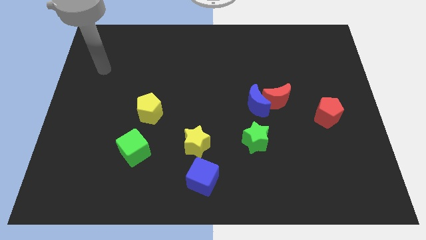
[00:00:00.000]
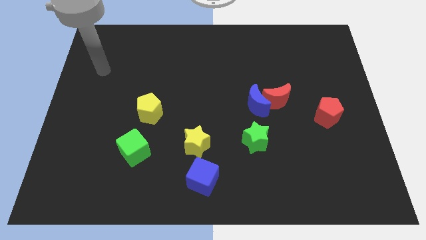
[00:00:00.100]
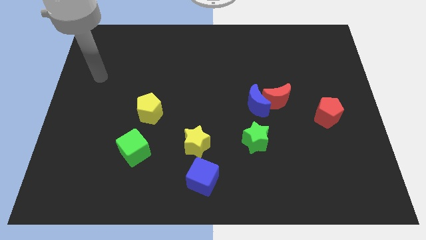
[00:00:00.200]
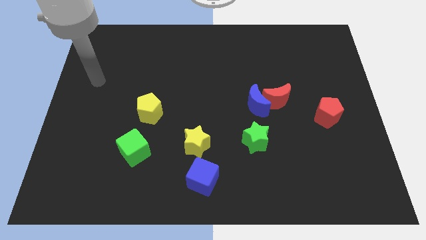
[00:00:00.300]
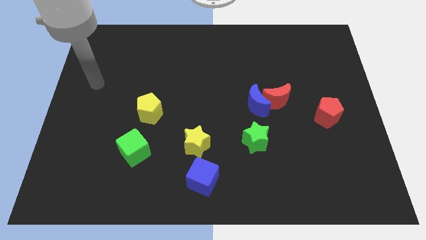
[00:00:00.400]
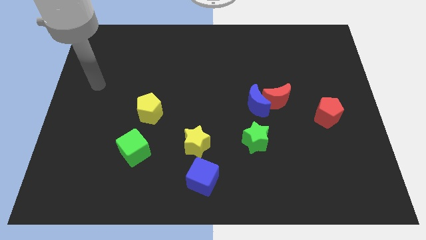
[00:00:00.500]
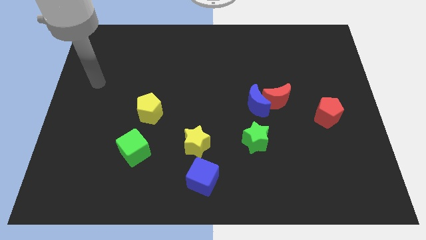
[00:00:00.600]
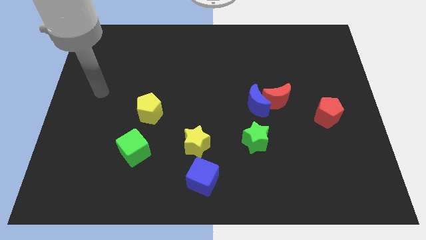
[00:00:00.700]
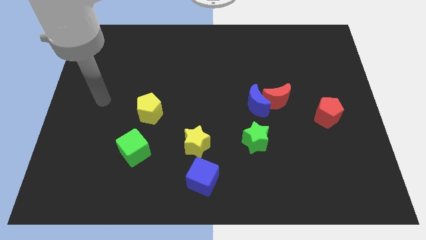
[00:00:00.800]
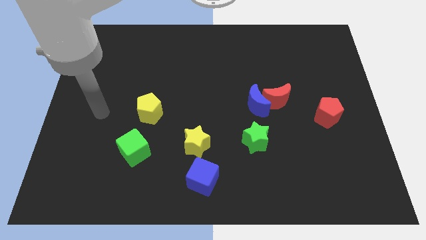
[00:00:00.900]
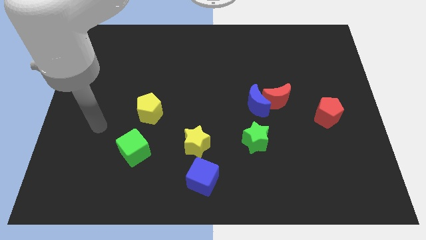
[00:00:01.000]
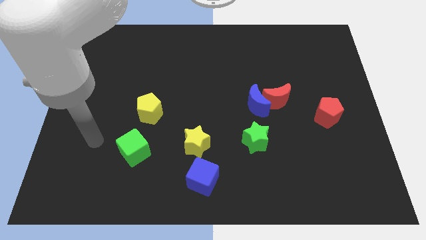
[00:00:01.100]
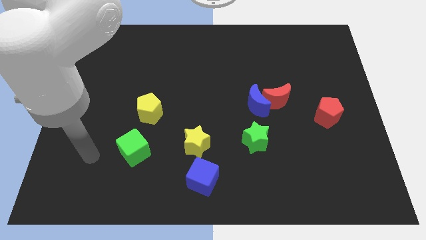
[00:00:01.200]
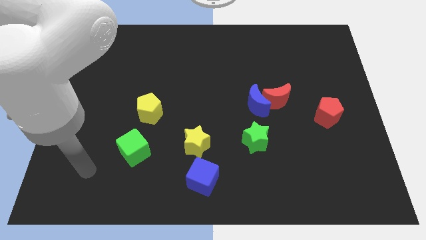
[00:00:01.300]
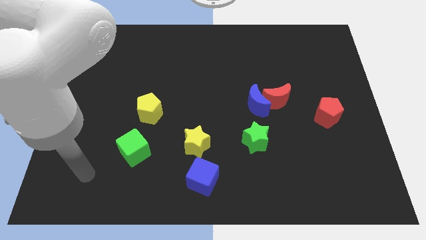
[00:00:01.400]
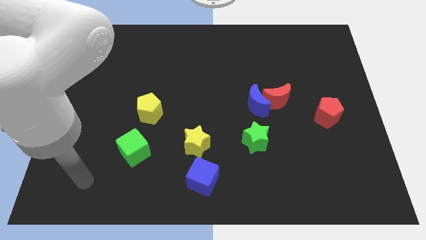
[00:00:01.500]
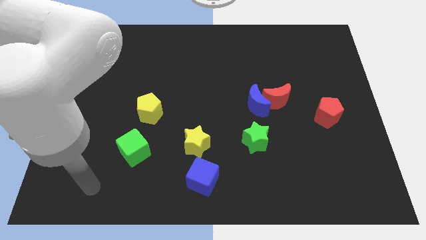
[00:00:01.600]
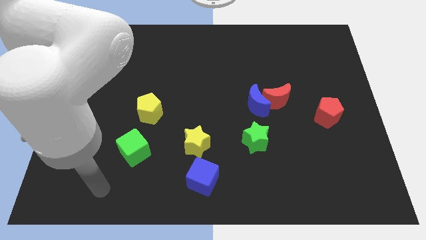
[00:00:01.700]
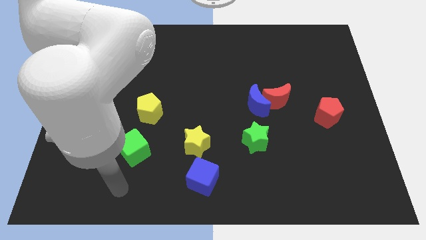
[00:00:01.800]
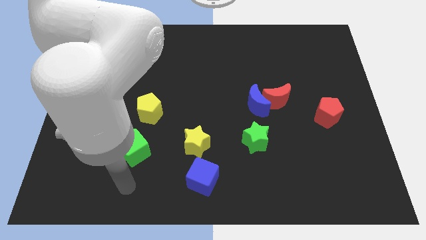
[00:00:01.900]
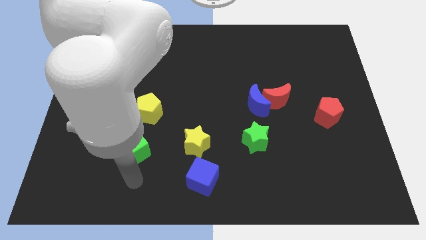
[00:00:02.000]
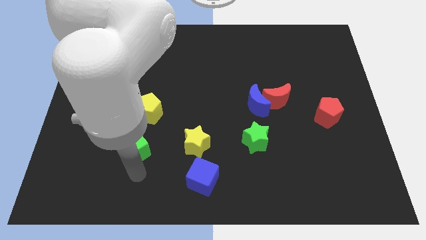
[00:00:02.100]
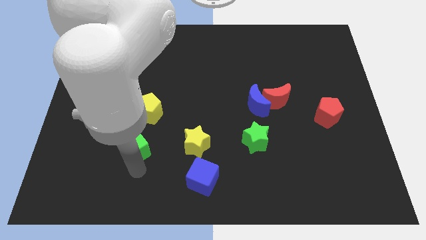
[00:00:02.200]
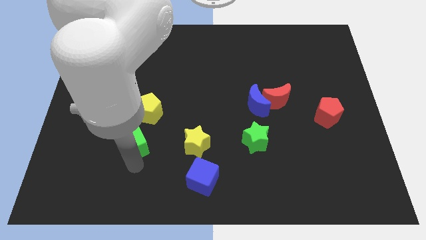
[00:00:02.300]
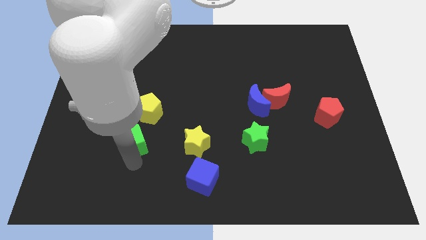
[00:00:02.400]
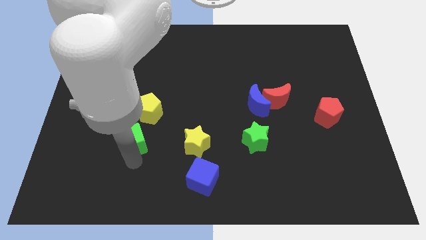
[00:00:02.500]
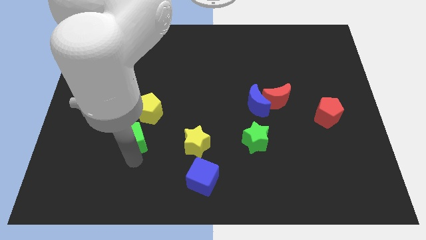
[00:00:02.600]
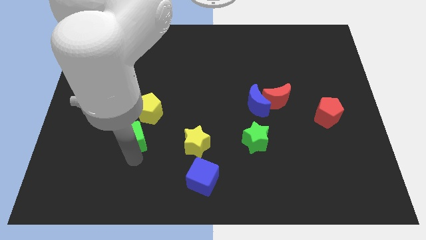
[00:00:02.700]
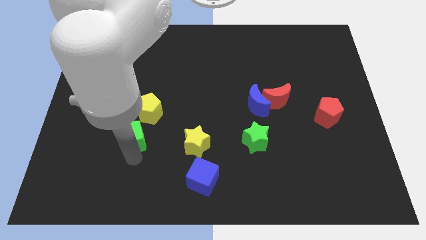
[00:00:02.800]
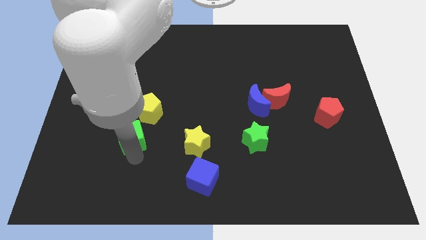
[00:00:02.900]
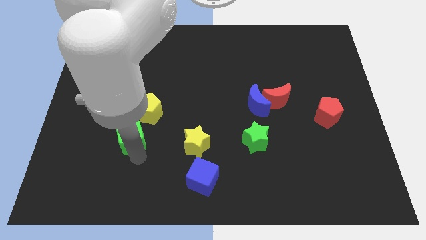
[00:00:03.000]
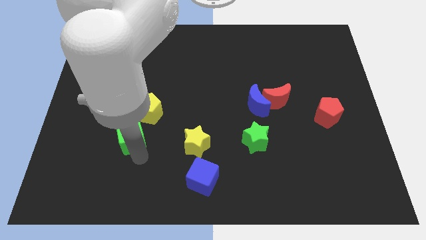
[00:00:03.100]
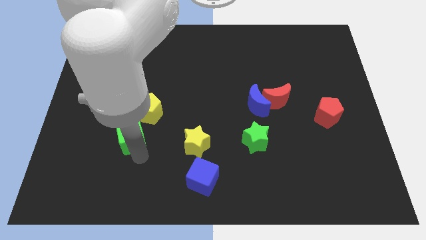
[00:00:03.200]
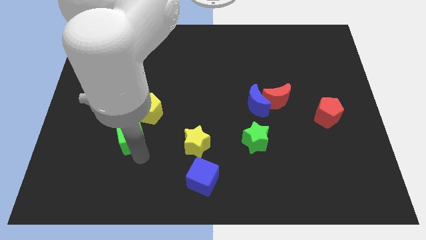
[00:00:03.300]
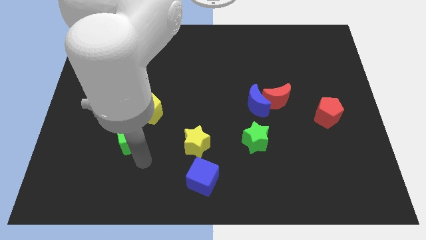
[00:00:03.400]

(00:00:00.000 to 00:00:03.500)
move the green cube slightly up

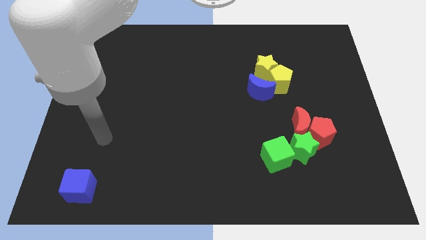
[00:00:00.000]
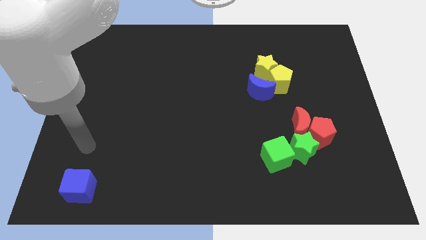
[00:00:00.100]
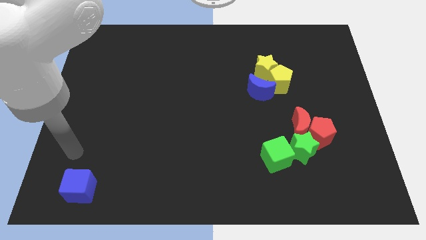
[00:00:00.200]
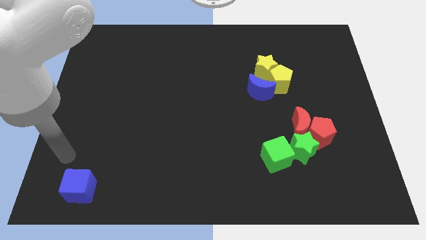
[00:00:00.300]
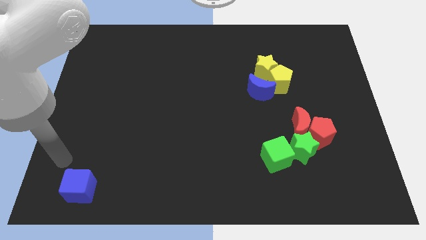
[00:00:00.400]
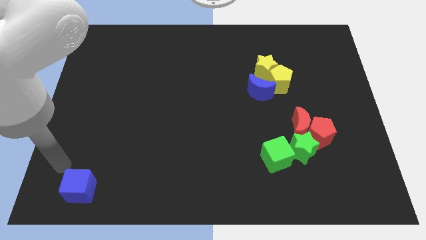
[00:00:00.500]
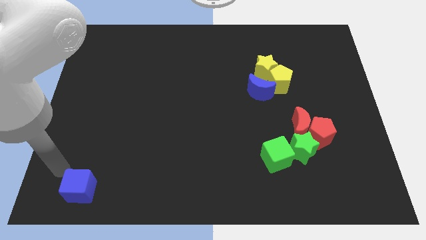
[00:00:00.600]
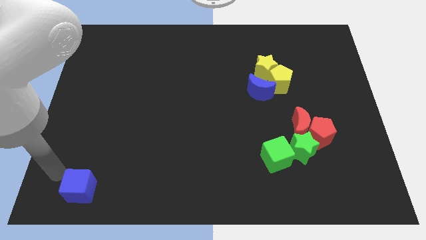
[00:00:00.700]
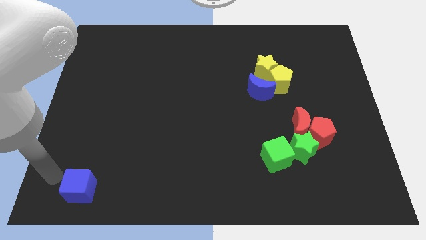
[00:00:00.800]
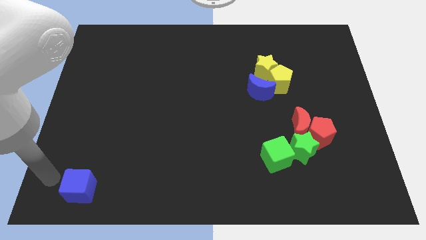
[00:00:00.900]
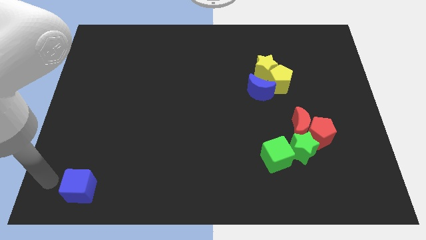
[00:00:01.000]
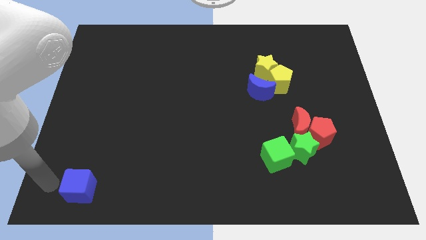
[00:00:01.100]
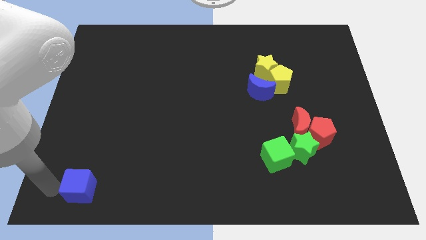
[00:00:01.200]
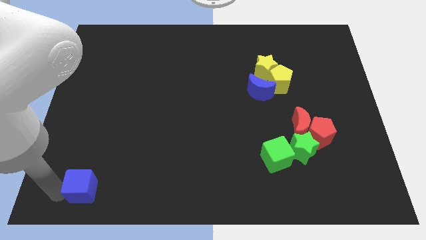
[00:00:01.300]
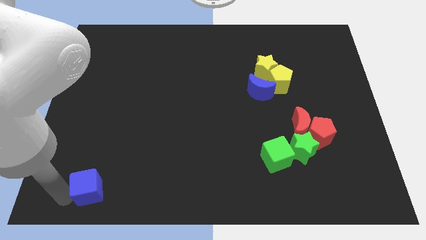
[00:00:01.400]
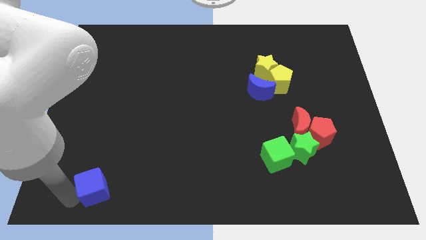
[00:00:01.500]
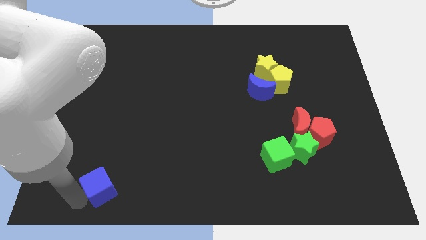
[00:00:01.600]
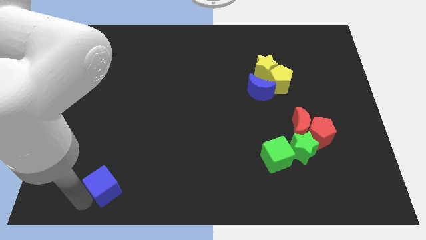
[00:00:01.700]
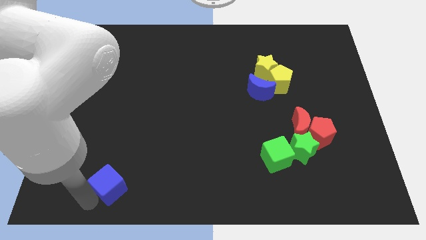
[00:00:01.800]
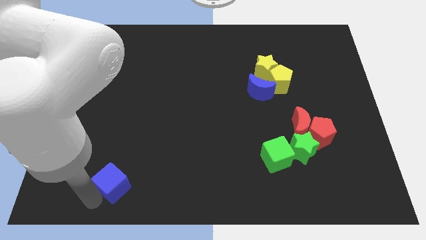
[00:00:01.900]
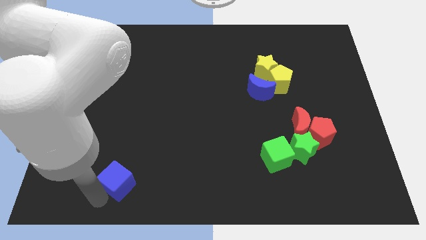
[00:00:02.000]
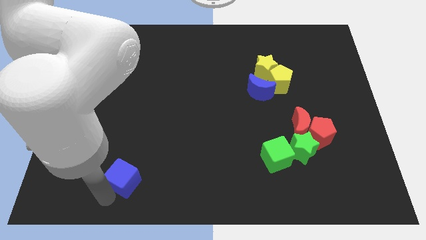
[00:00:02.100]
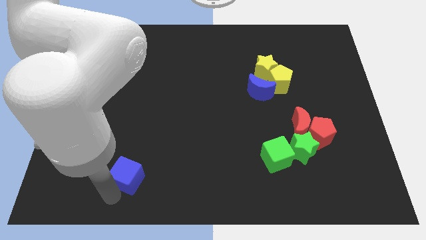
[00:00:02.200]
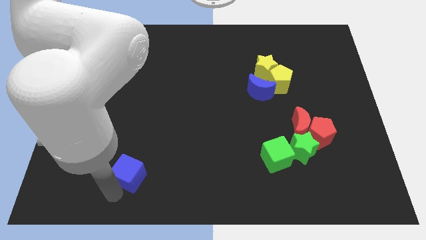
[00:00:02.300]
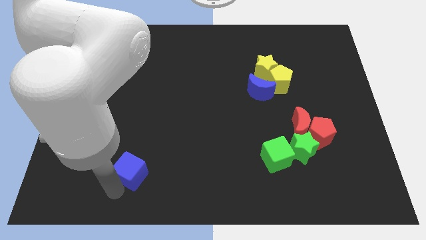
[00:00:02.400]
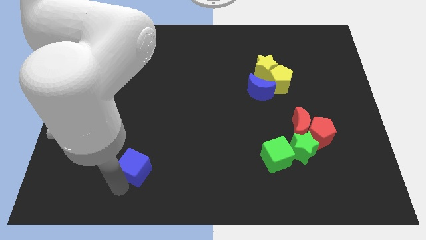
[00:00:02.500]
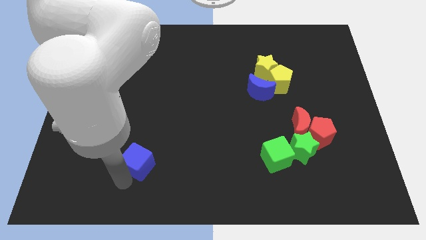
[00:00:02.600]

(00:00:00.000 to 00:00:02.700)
push the blue cube to the center

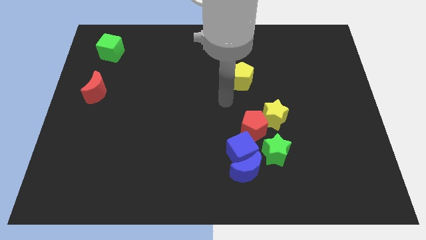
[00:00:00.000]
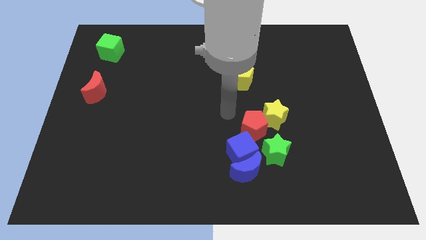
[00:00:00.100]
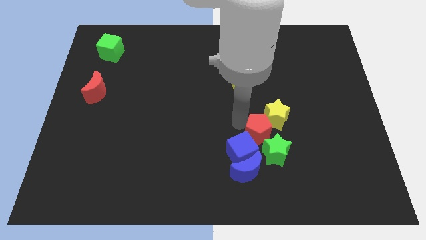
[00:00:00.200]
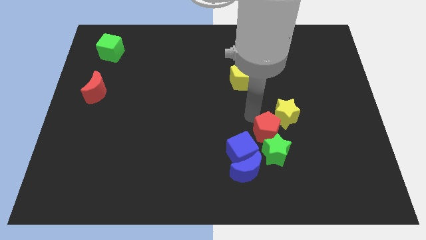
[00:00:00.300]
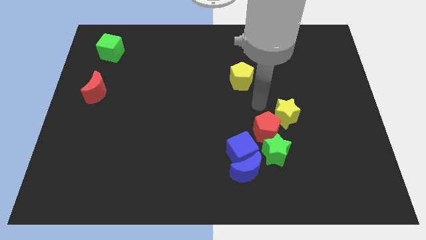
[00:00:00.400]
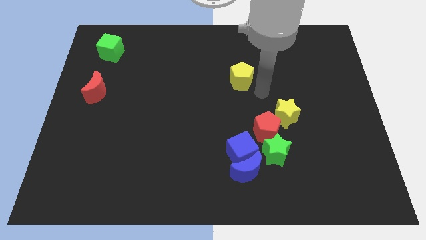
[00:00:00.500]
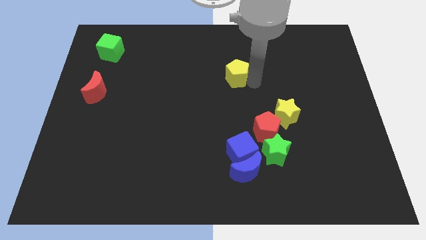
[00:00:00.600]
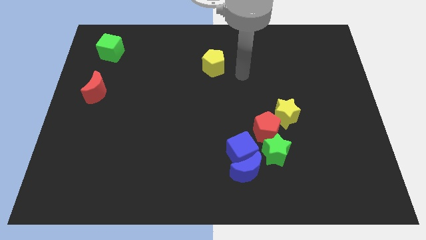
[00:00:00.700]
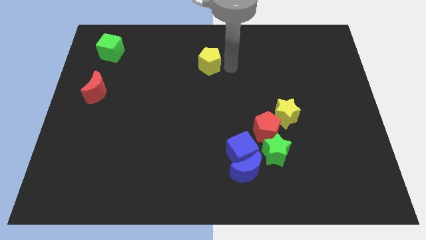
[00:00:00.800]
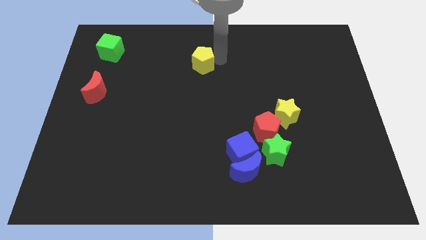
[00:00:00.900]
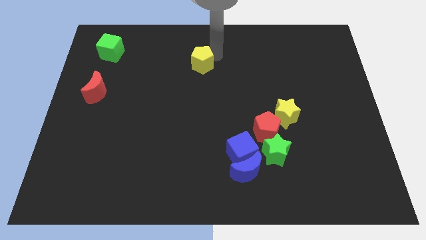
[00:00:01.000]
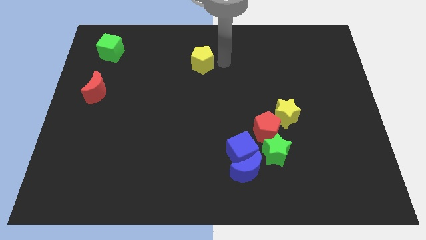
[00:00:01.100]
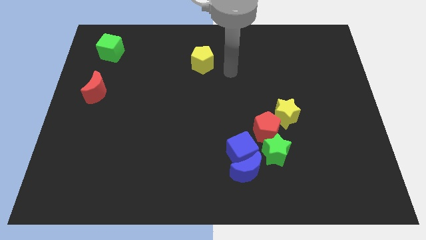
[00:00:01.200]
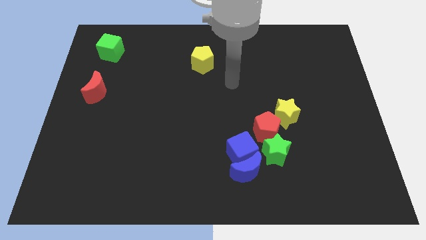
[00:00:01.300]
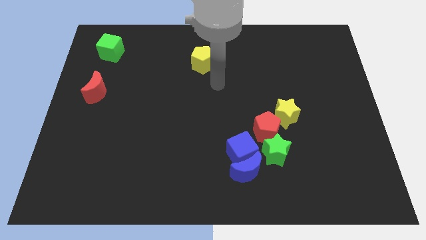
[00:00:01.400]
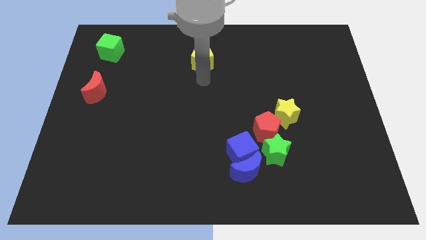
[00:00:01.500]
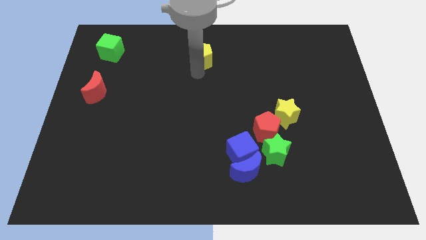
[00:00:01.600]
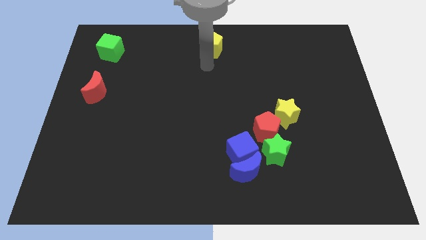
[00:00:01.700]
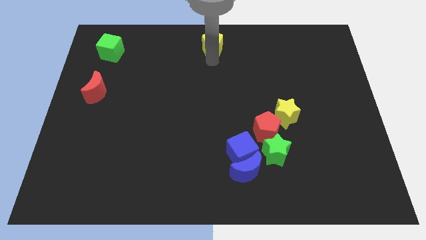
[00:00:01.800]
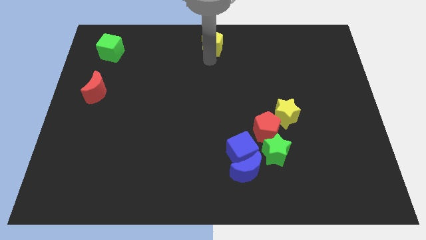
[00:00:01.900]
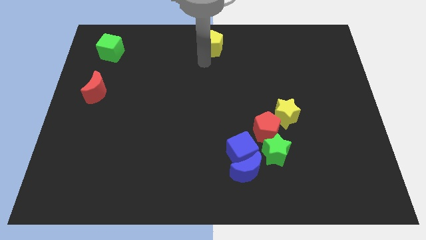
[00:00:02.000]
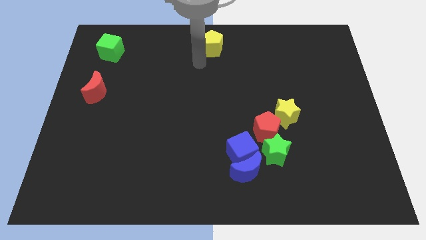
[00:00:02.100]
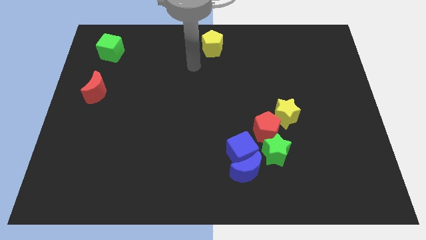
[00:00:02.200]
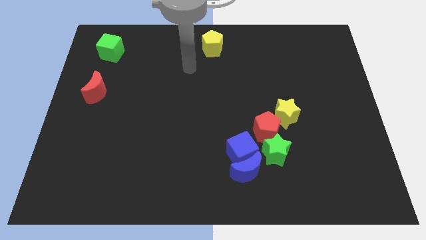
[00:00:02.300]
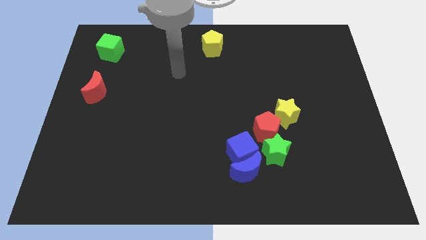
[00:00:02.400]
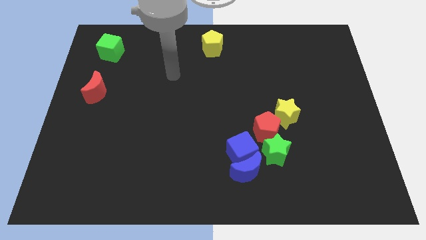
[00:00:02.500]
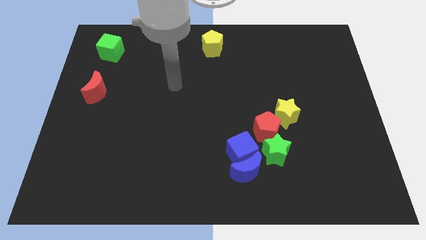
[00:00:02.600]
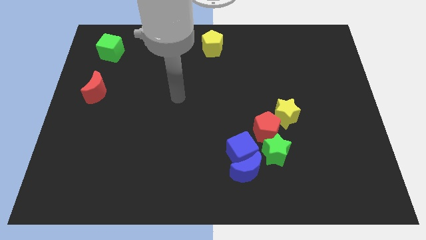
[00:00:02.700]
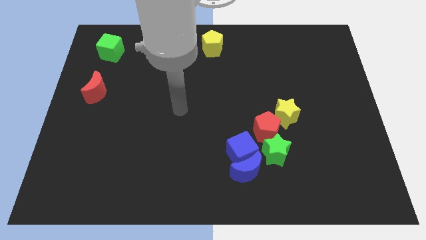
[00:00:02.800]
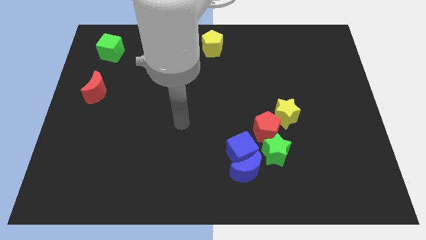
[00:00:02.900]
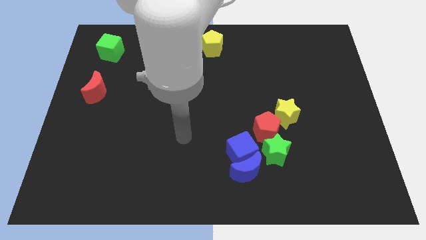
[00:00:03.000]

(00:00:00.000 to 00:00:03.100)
move yellow pentagon towards top middle of the board
